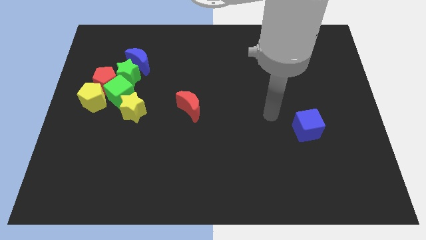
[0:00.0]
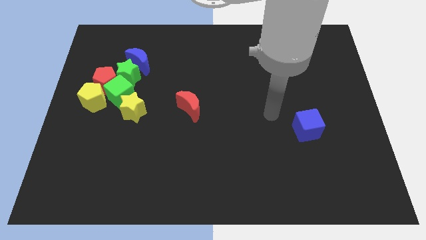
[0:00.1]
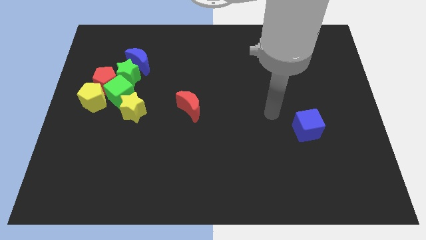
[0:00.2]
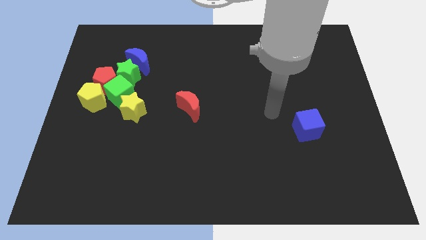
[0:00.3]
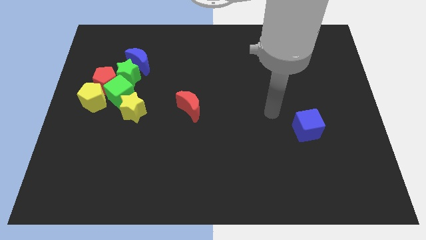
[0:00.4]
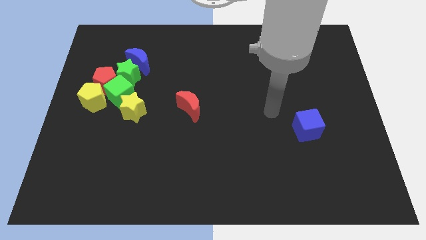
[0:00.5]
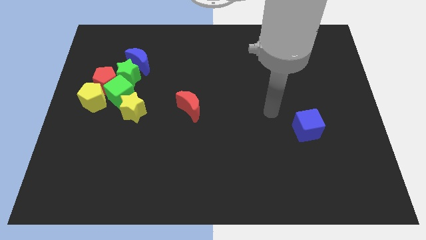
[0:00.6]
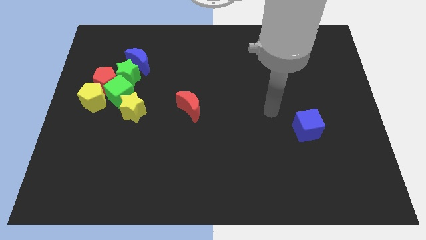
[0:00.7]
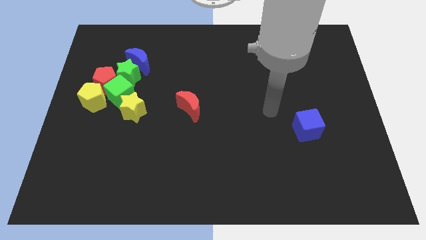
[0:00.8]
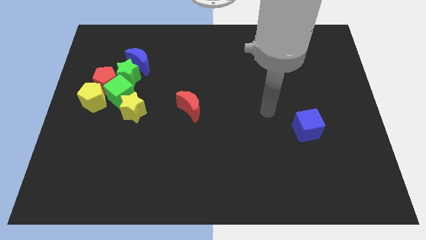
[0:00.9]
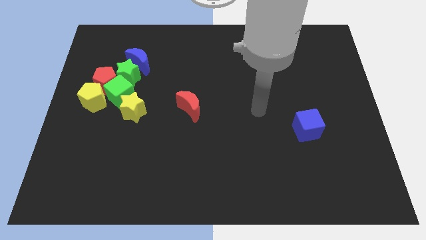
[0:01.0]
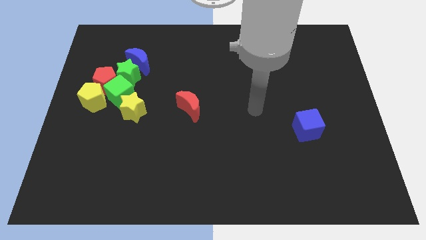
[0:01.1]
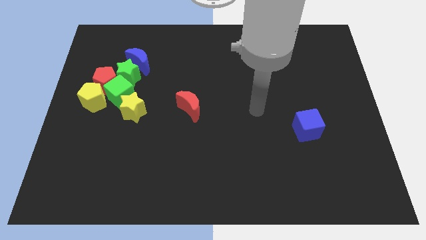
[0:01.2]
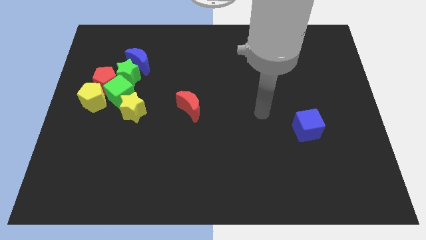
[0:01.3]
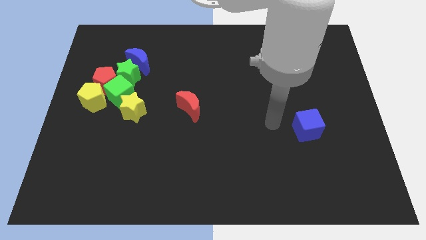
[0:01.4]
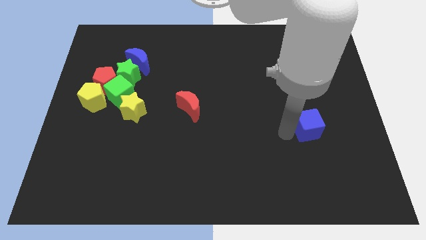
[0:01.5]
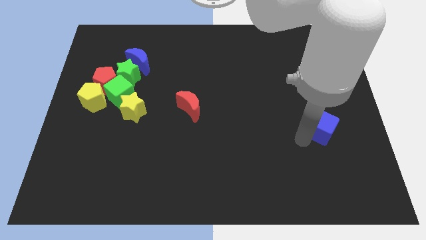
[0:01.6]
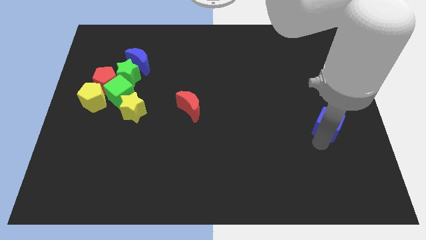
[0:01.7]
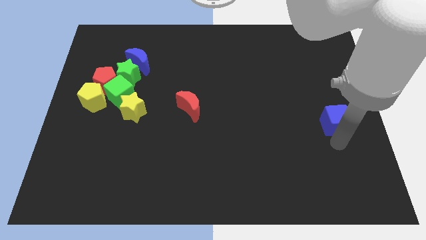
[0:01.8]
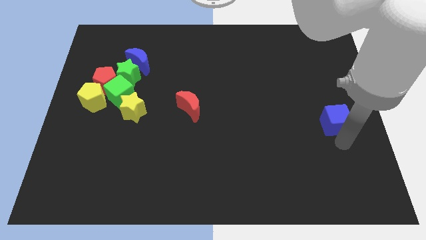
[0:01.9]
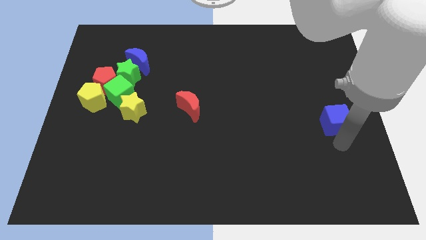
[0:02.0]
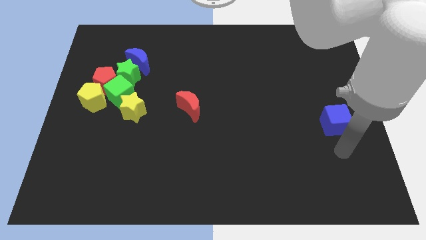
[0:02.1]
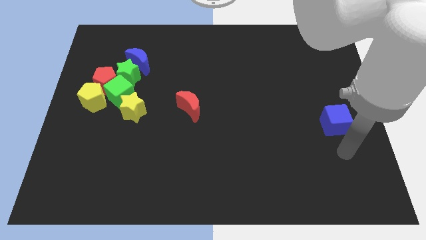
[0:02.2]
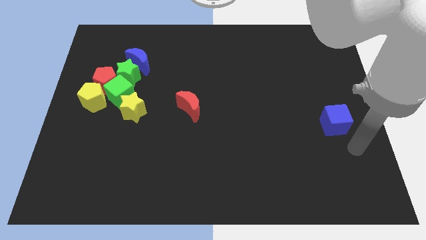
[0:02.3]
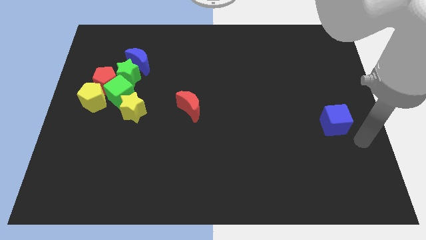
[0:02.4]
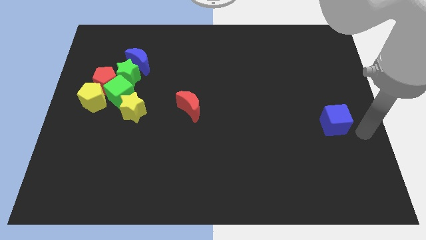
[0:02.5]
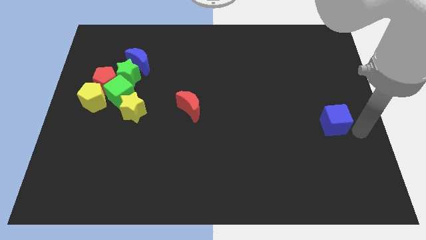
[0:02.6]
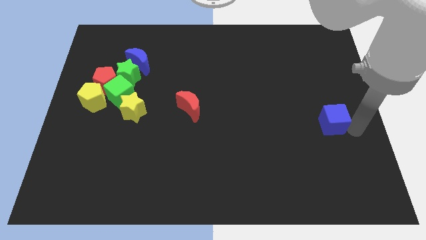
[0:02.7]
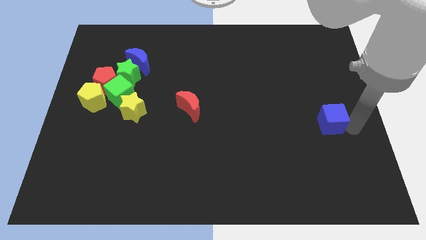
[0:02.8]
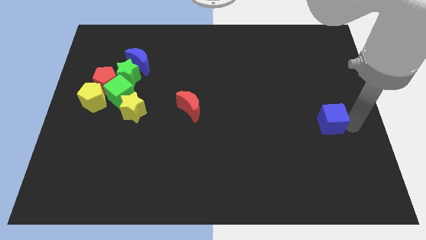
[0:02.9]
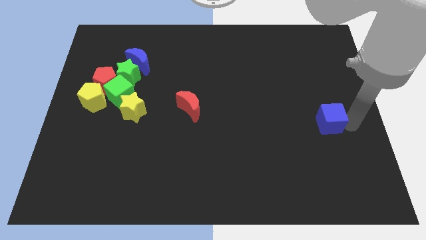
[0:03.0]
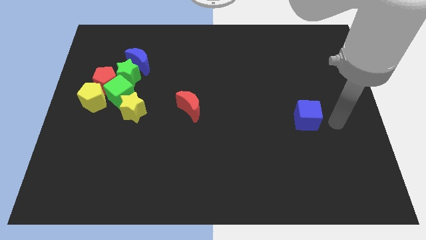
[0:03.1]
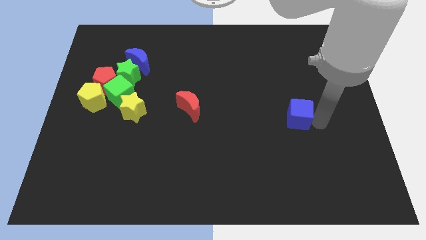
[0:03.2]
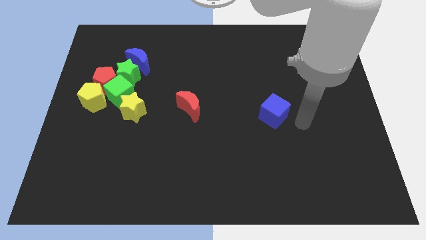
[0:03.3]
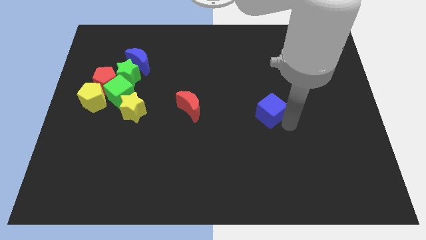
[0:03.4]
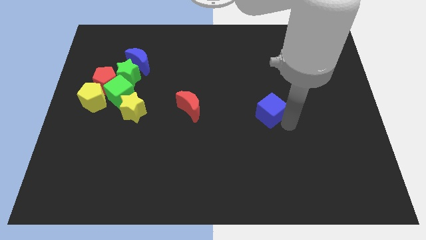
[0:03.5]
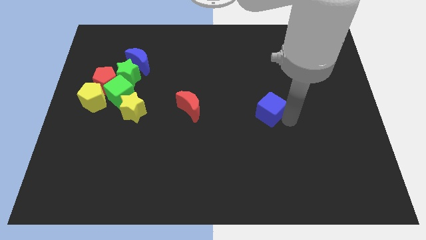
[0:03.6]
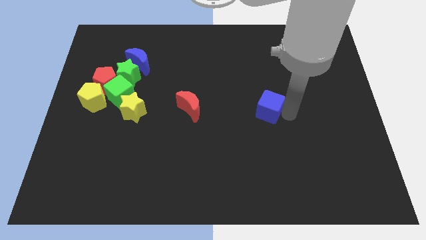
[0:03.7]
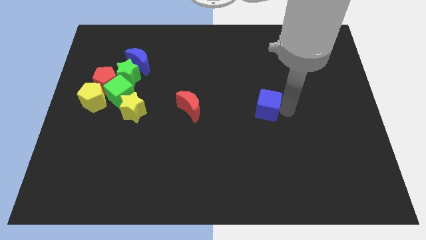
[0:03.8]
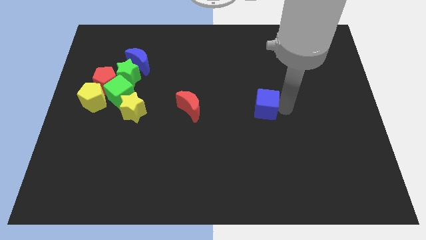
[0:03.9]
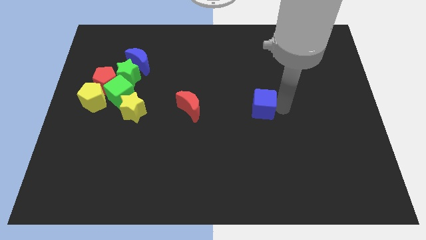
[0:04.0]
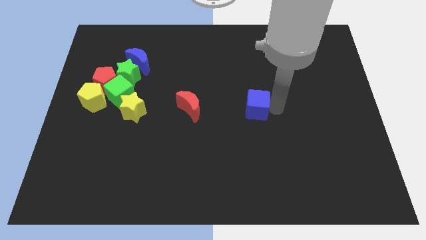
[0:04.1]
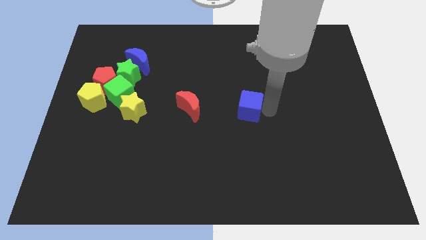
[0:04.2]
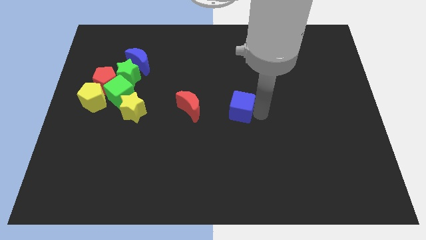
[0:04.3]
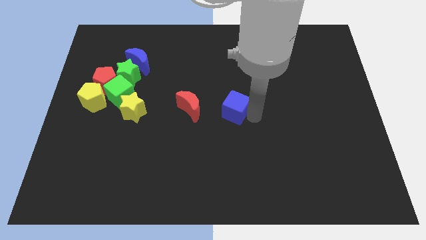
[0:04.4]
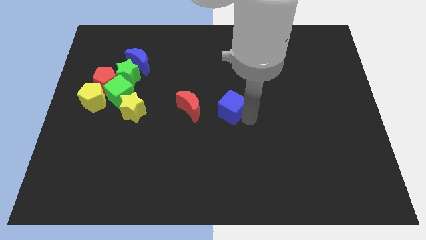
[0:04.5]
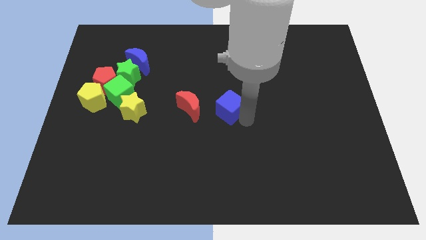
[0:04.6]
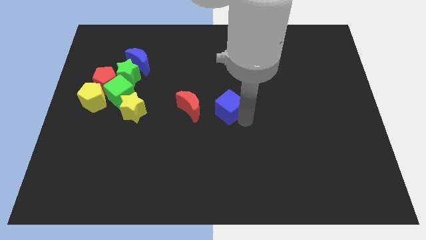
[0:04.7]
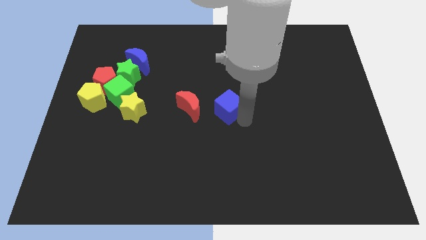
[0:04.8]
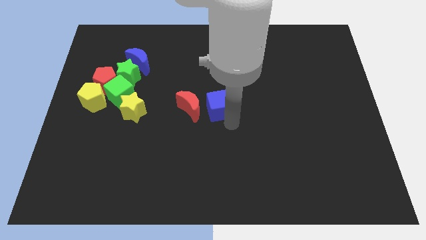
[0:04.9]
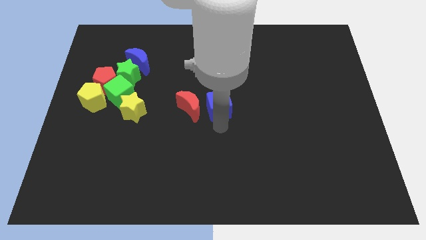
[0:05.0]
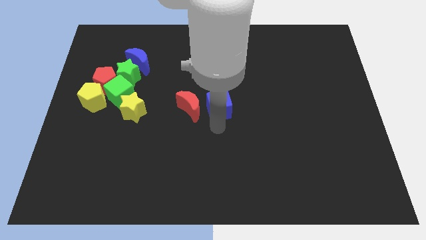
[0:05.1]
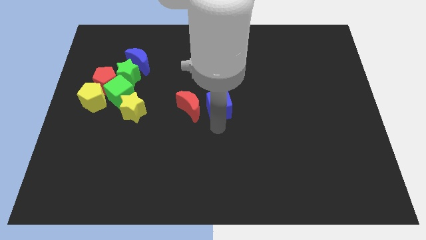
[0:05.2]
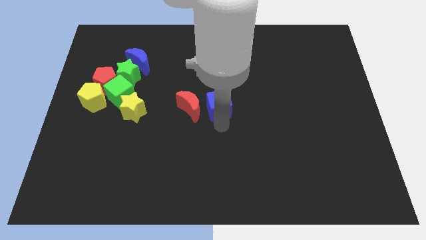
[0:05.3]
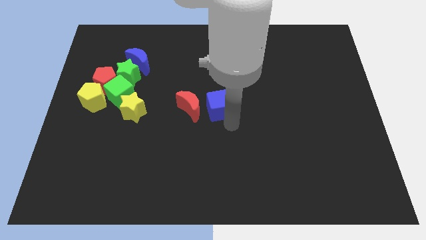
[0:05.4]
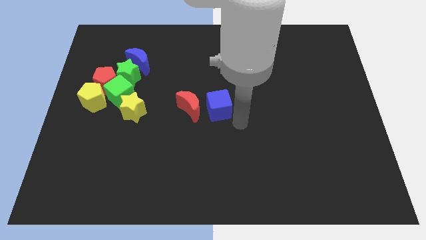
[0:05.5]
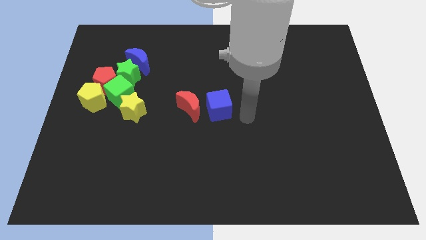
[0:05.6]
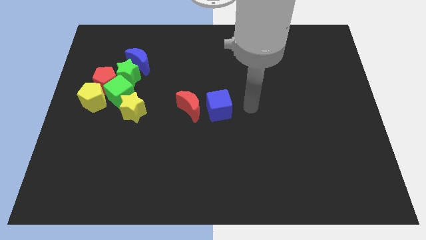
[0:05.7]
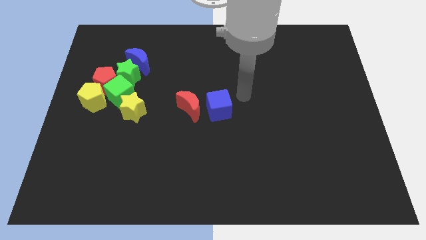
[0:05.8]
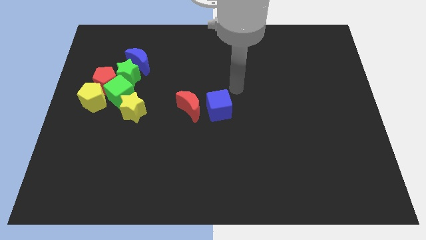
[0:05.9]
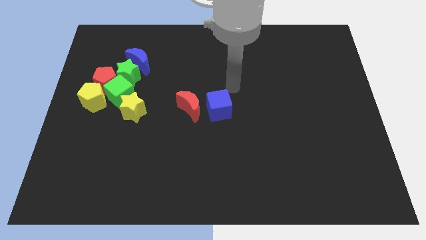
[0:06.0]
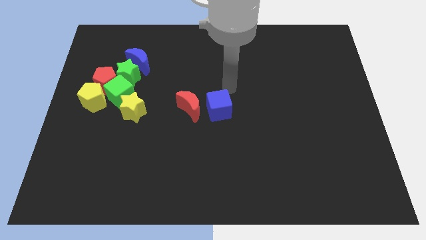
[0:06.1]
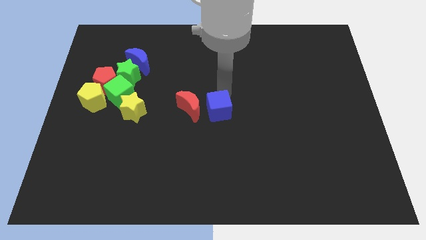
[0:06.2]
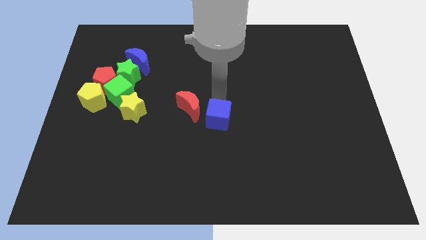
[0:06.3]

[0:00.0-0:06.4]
place the blue cube at the center of the board

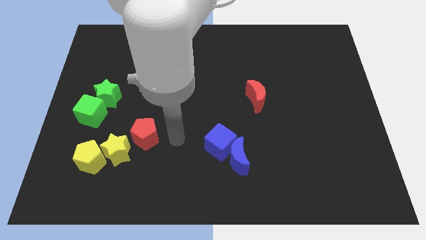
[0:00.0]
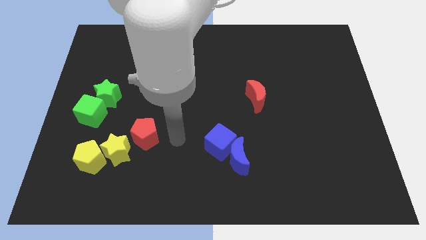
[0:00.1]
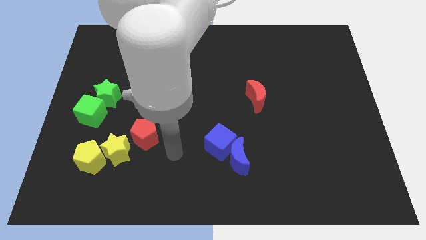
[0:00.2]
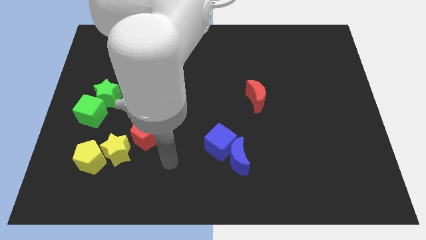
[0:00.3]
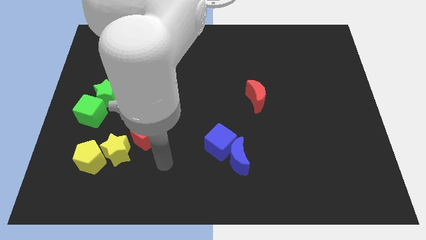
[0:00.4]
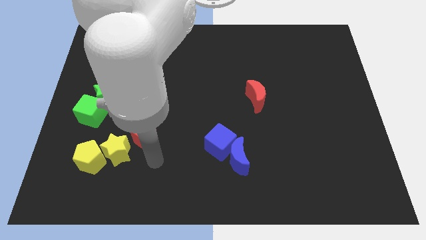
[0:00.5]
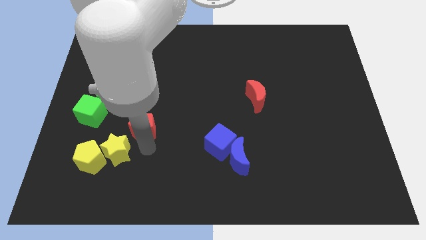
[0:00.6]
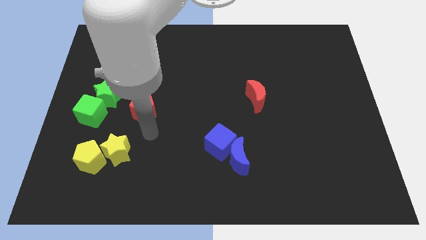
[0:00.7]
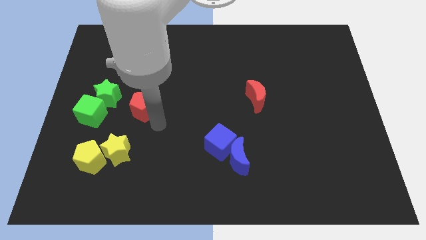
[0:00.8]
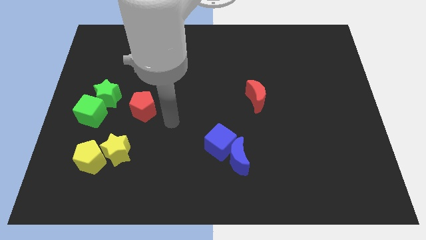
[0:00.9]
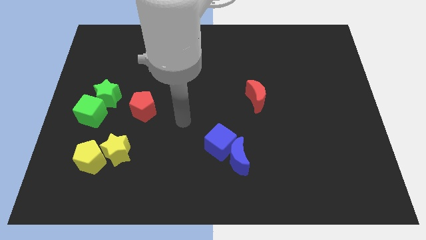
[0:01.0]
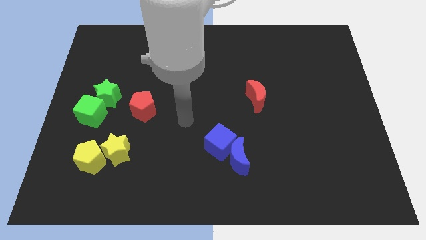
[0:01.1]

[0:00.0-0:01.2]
move the red pentagon upwards

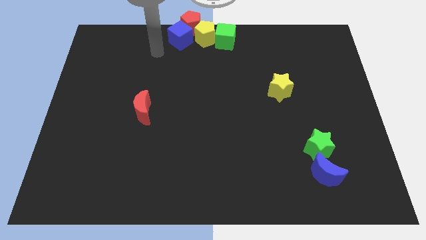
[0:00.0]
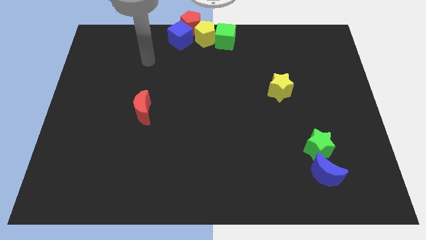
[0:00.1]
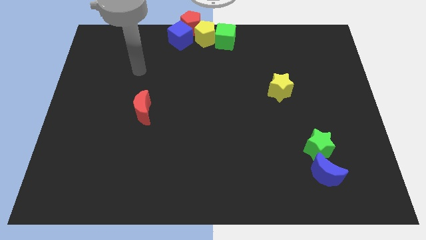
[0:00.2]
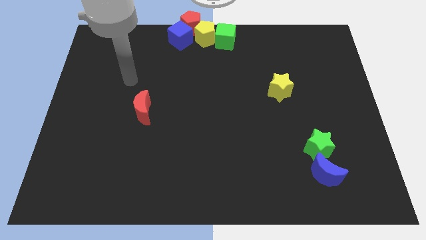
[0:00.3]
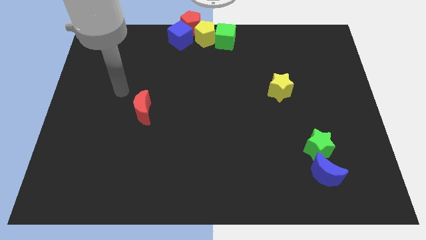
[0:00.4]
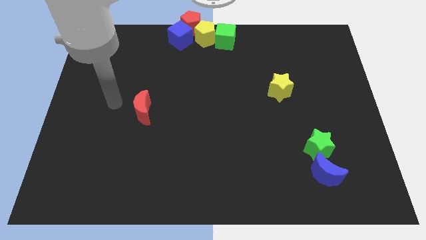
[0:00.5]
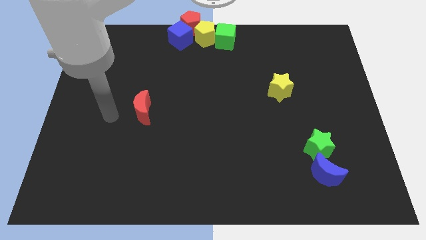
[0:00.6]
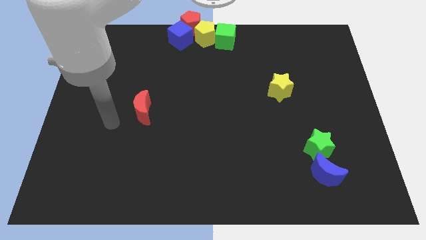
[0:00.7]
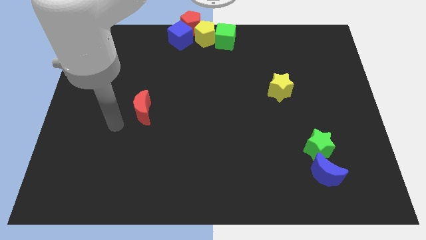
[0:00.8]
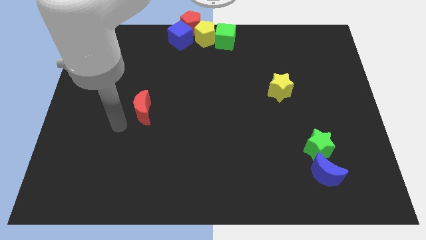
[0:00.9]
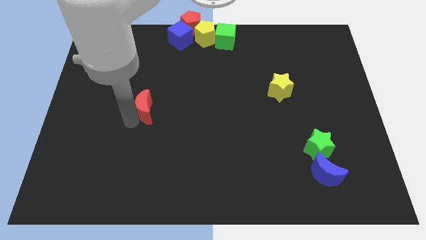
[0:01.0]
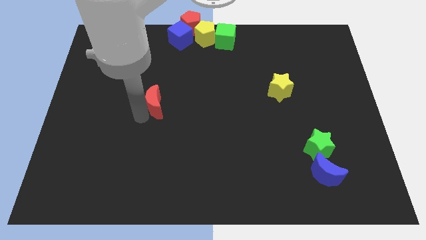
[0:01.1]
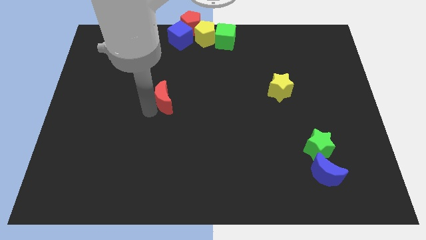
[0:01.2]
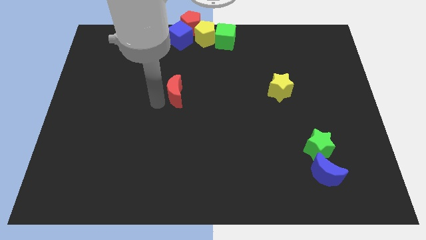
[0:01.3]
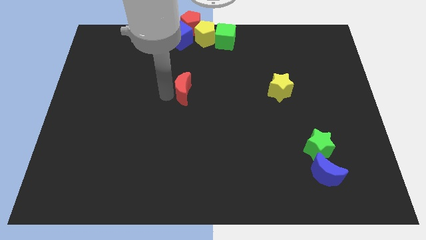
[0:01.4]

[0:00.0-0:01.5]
push the red moon to the left of the yellow star
